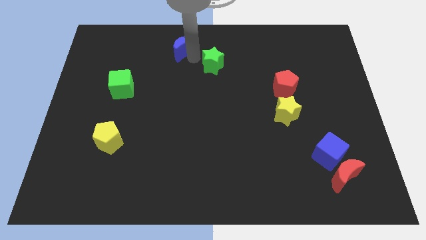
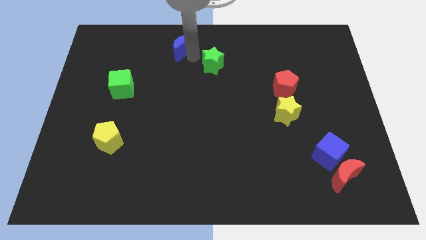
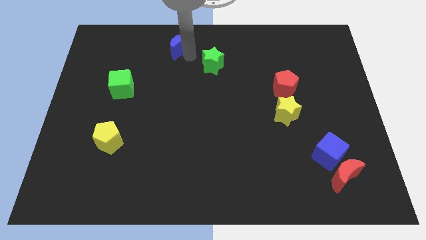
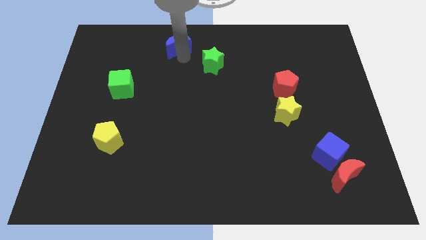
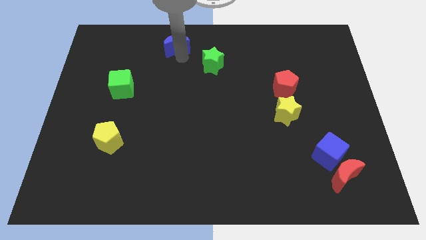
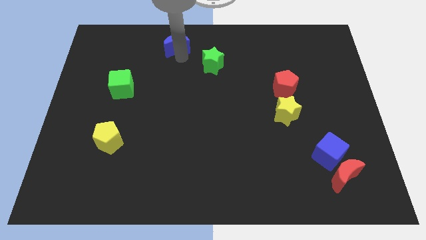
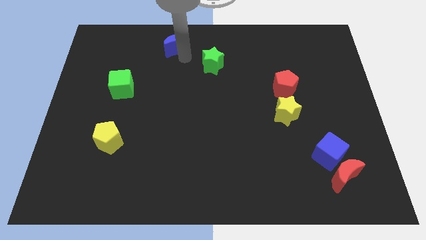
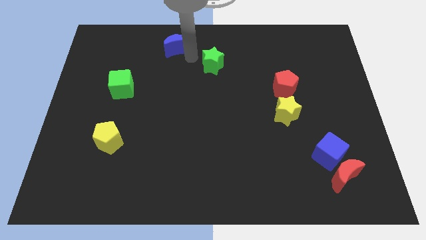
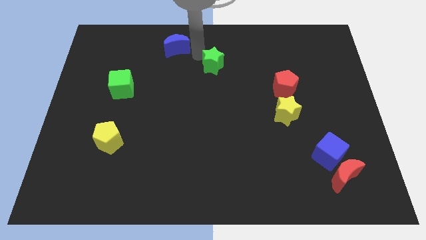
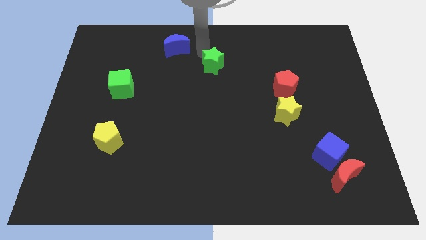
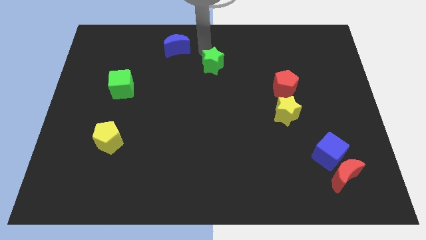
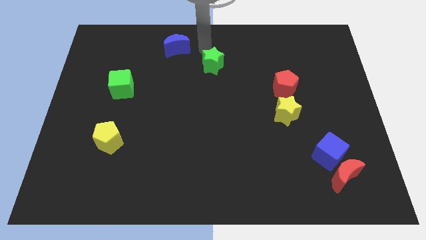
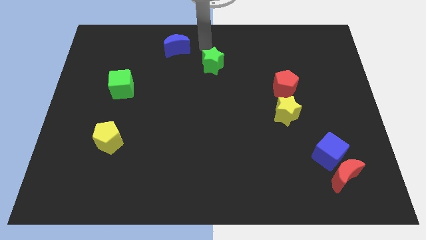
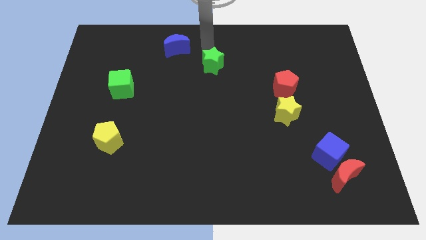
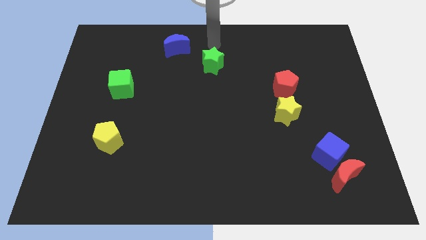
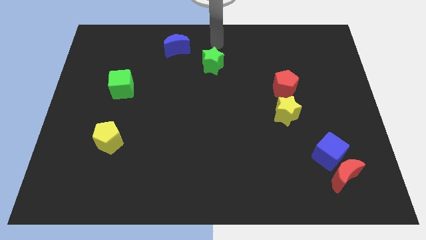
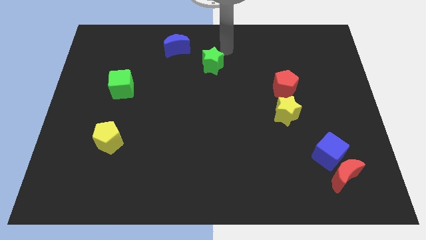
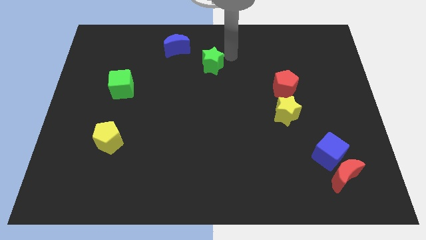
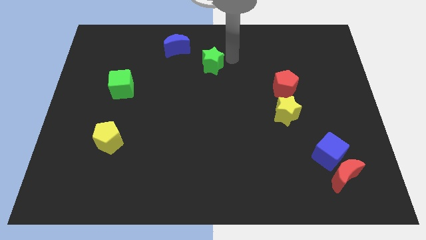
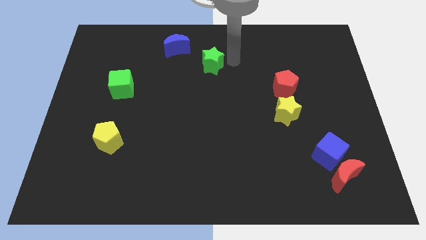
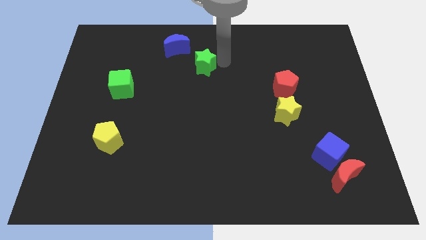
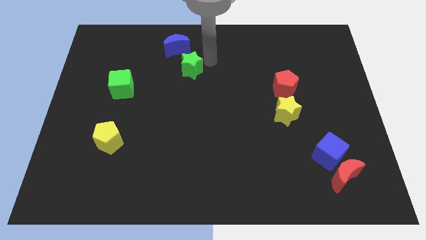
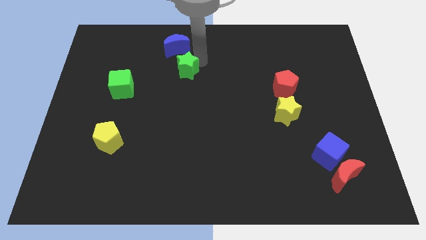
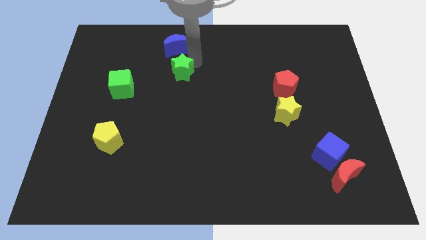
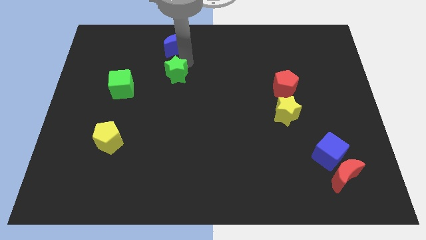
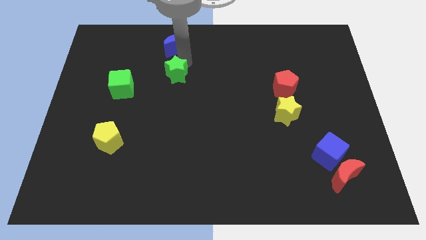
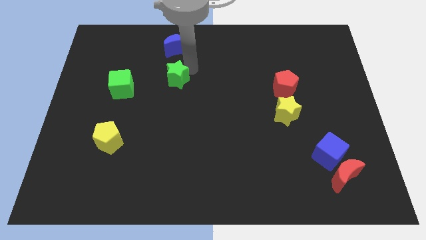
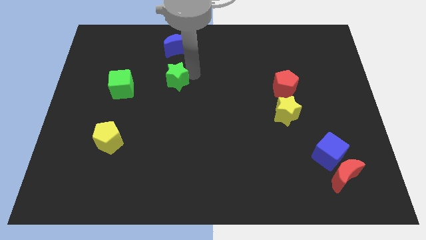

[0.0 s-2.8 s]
place the green star below the blue moon

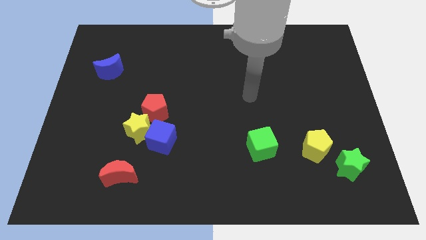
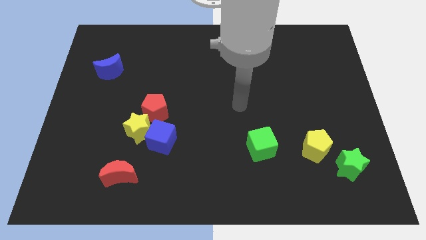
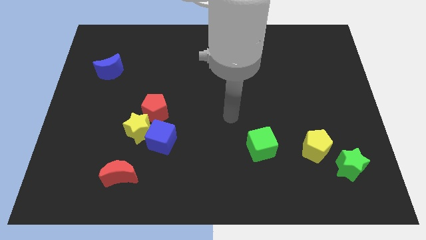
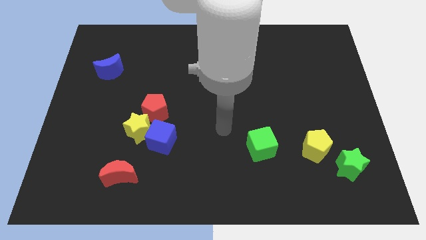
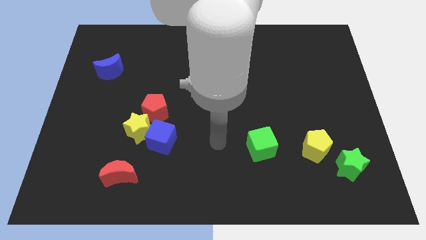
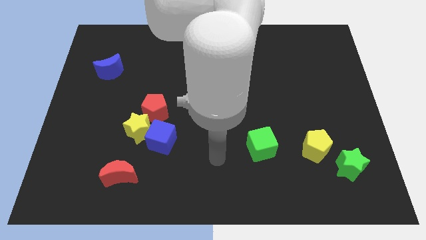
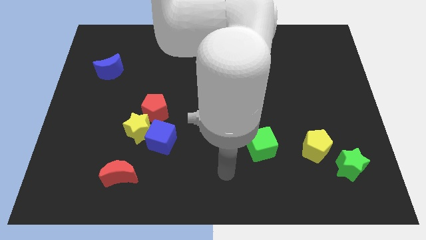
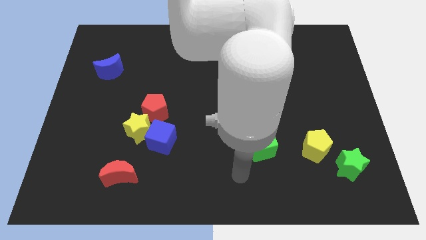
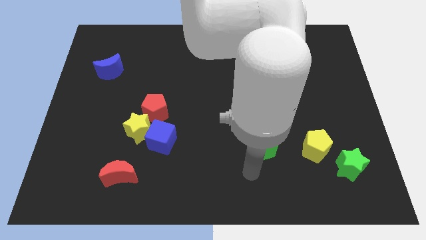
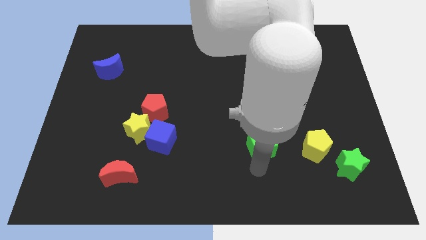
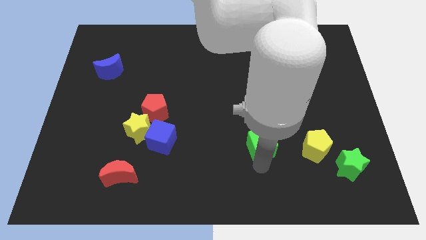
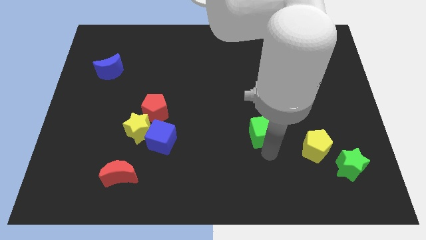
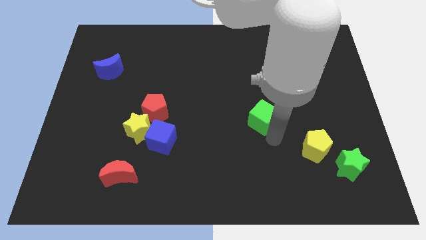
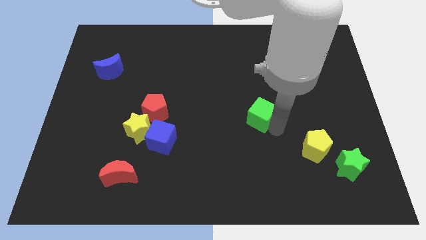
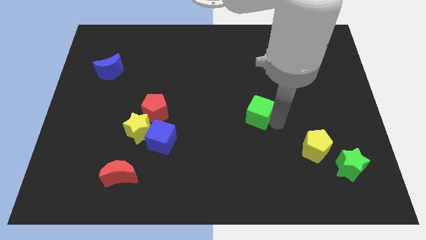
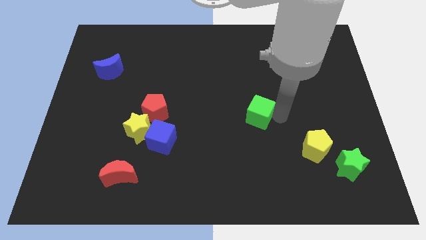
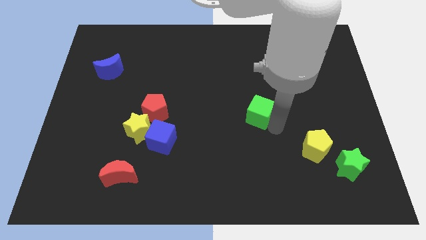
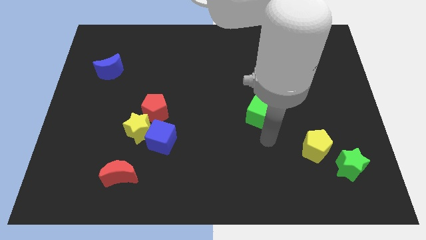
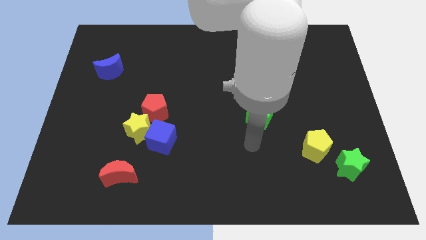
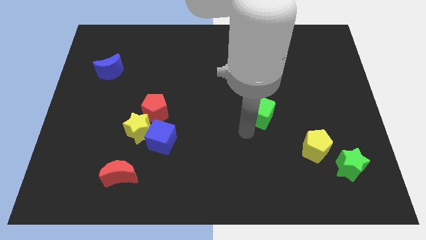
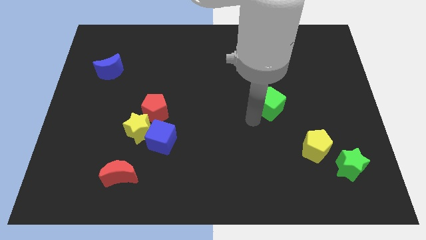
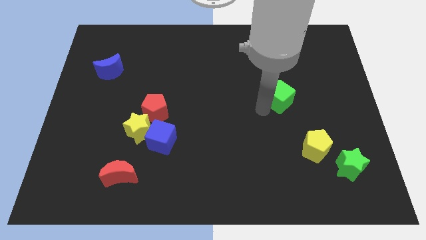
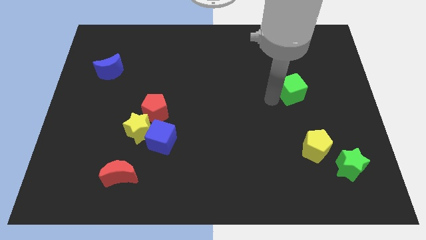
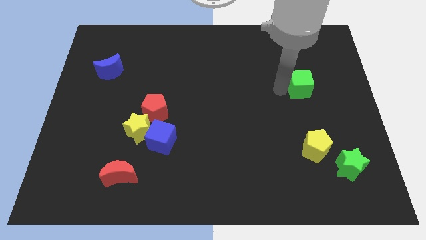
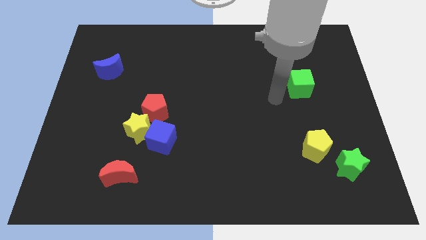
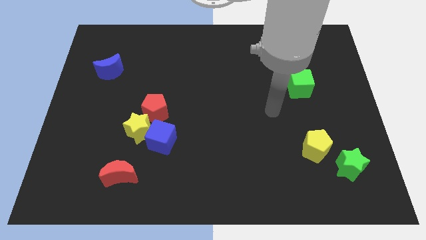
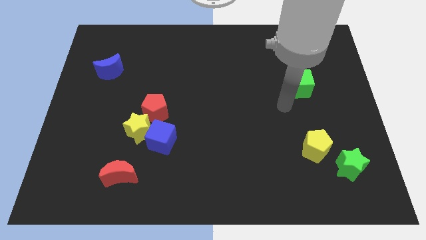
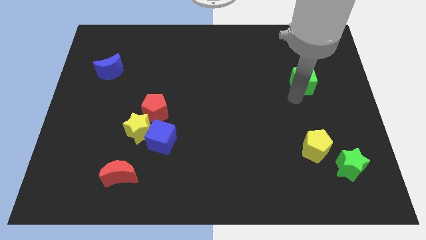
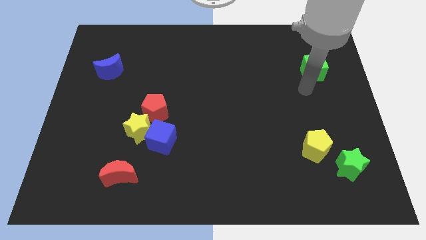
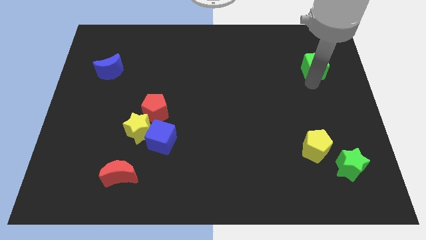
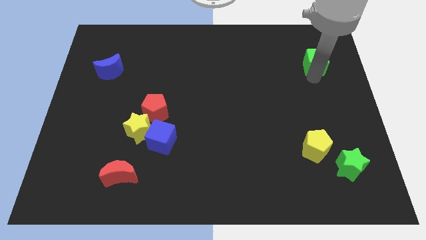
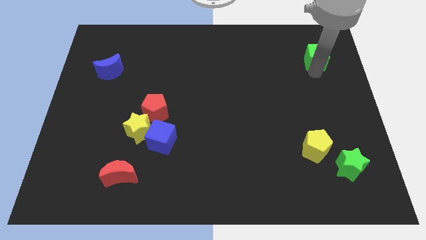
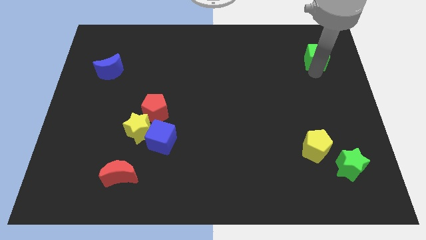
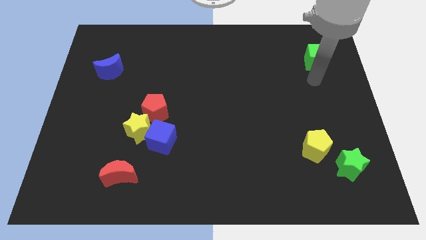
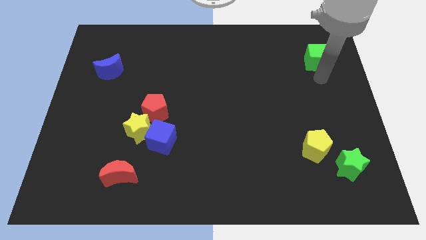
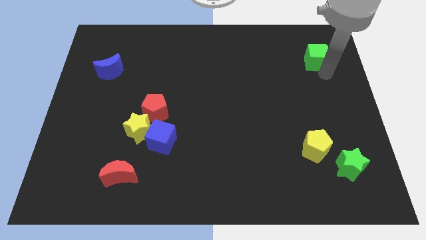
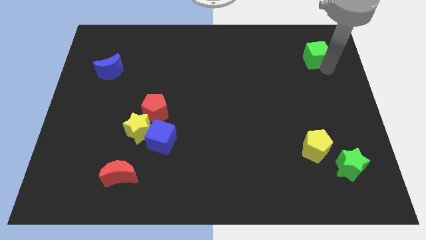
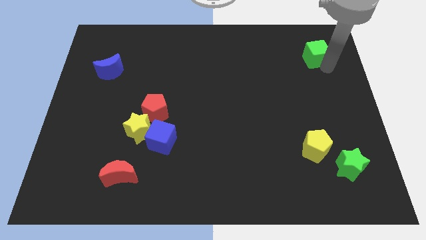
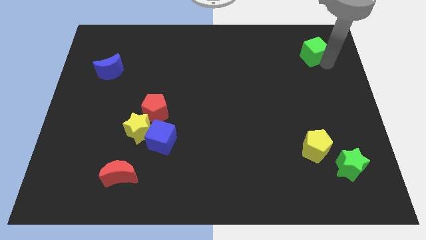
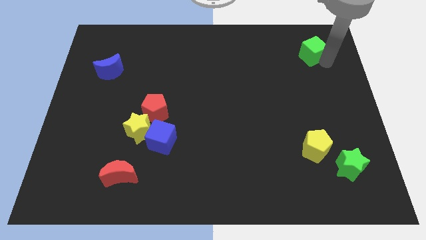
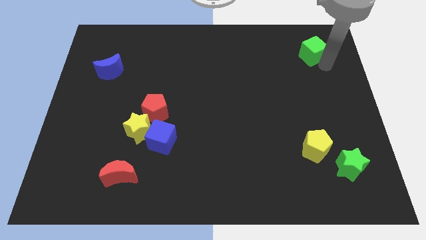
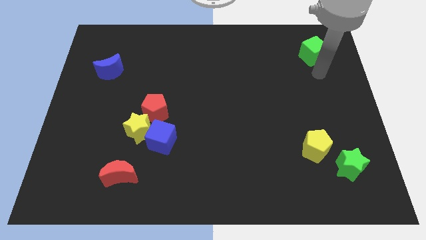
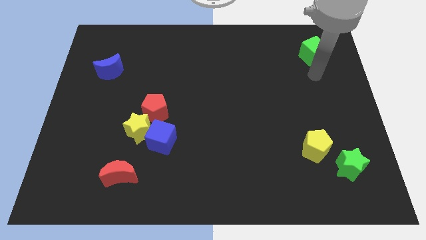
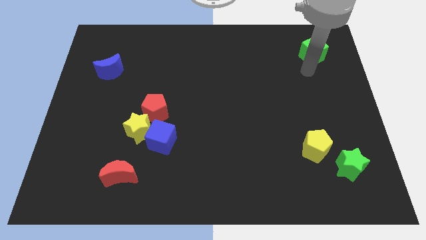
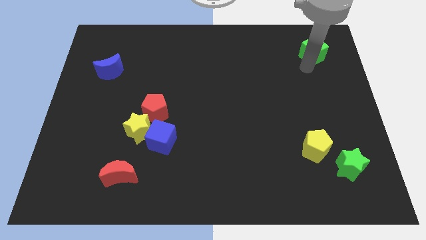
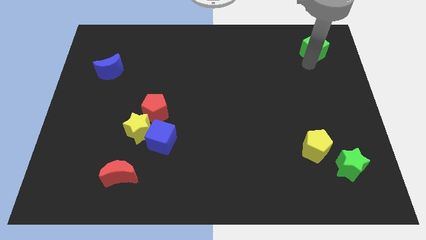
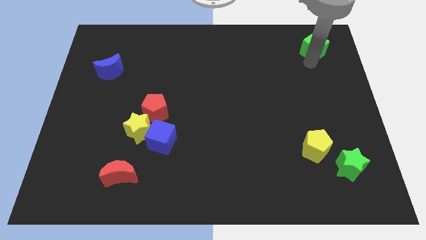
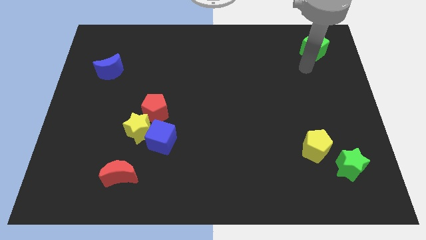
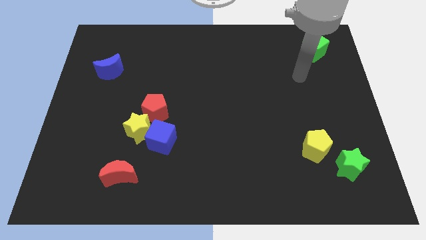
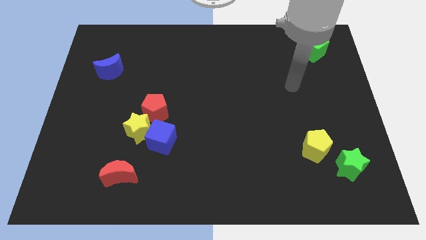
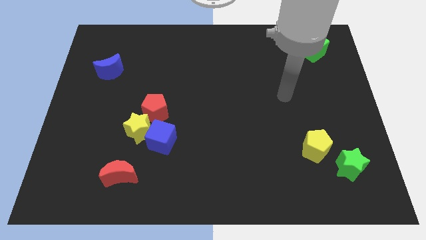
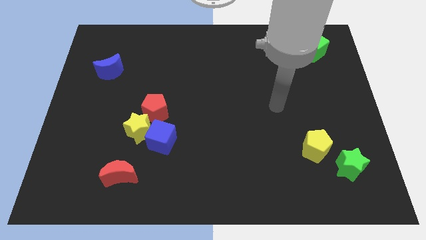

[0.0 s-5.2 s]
place the green cube to the top right

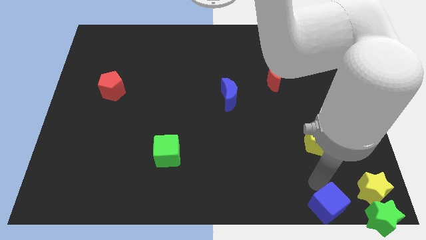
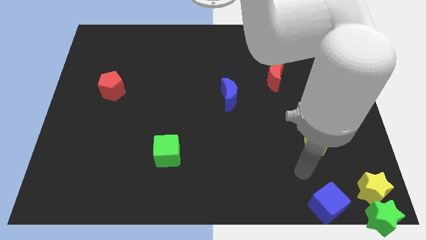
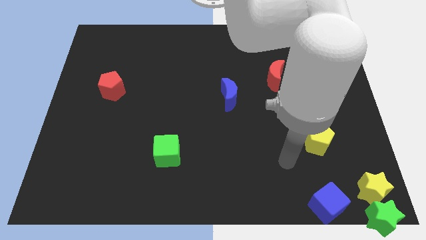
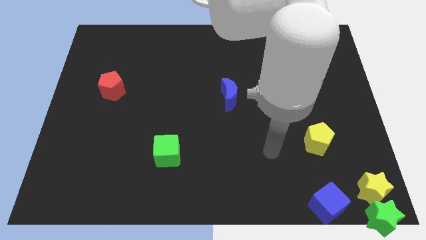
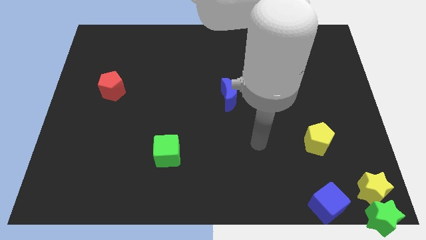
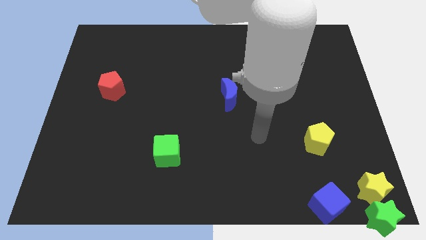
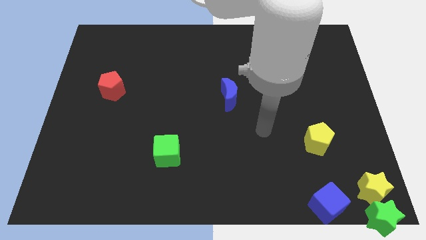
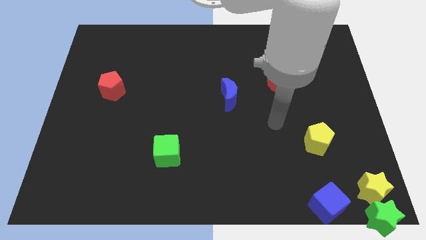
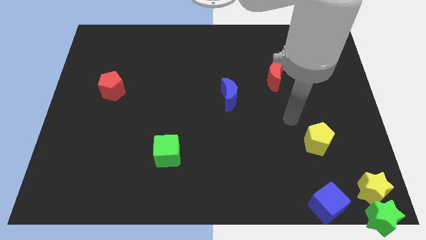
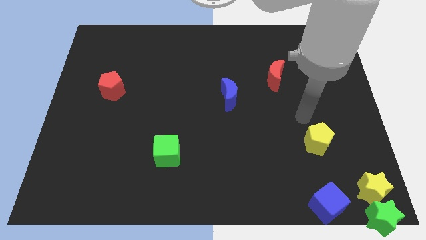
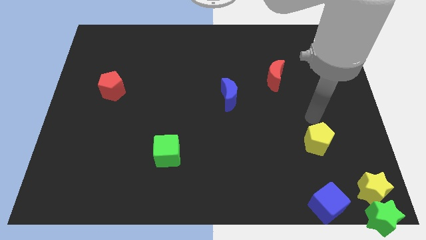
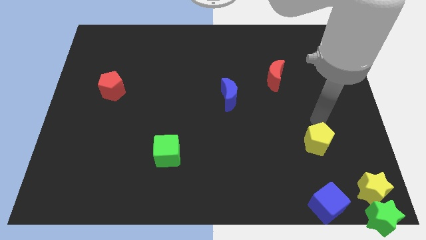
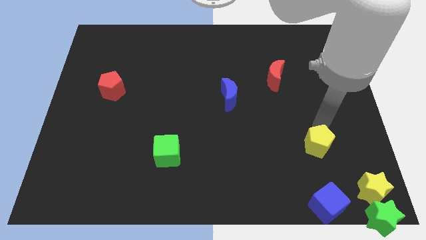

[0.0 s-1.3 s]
touch the top of yellow pentagon
